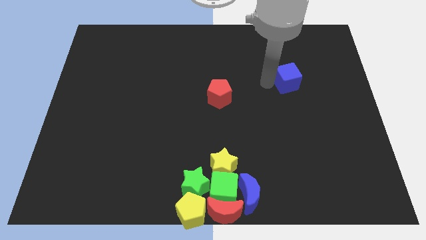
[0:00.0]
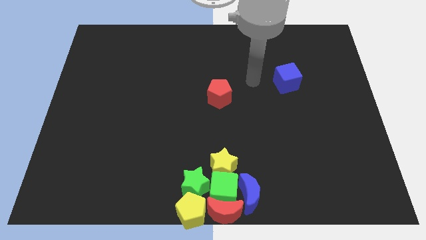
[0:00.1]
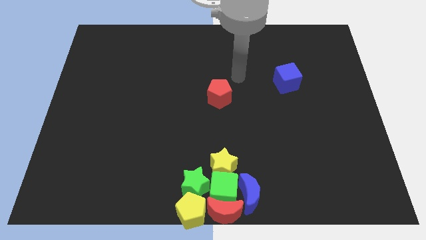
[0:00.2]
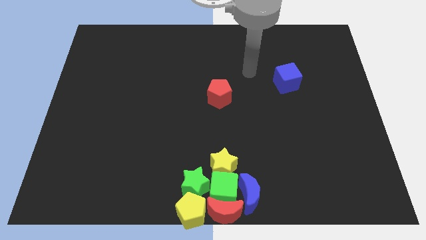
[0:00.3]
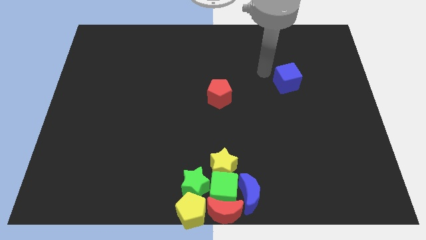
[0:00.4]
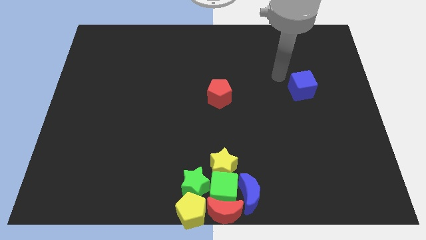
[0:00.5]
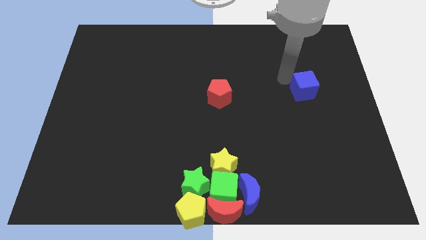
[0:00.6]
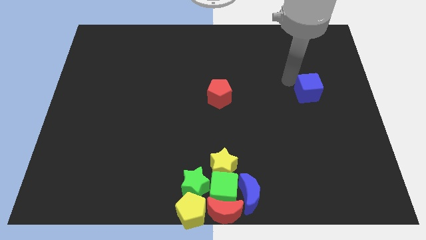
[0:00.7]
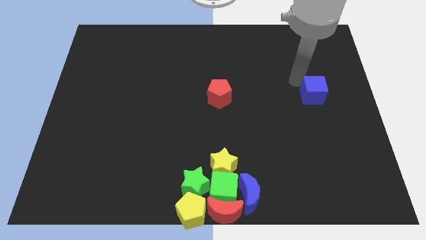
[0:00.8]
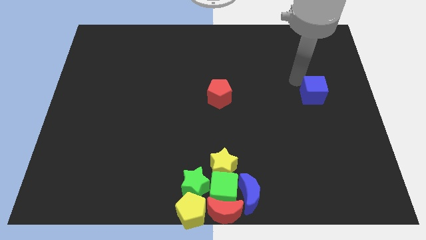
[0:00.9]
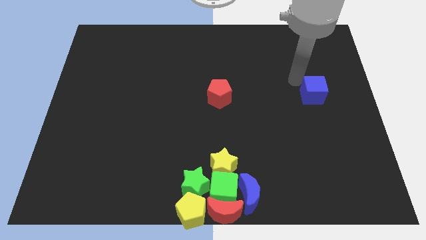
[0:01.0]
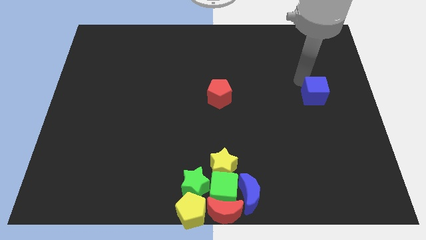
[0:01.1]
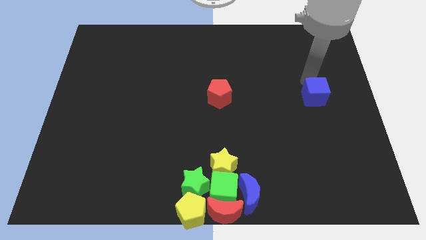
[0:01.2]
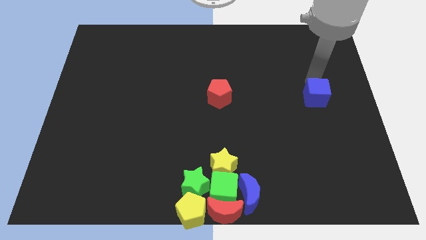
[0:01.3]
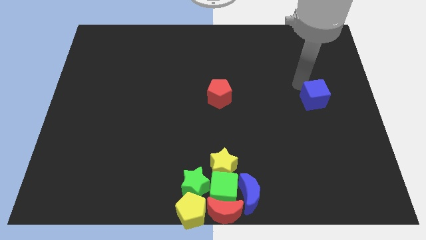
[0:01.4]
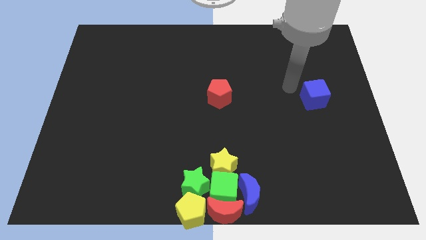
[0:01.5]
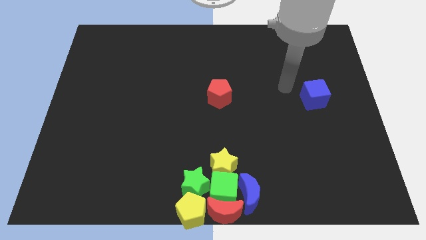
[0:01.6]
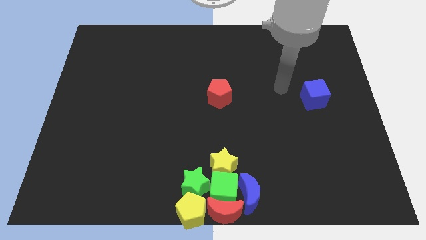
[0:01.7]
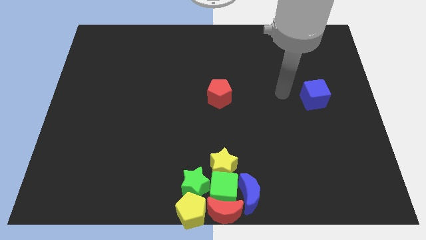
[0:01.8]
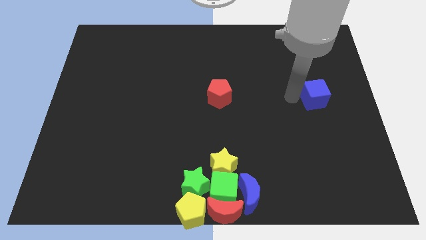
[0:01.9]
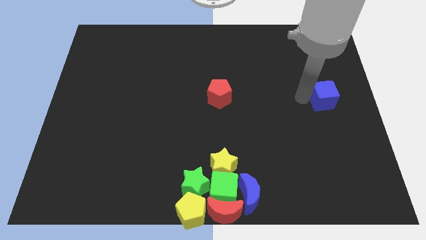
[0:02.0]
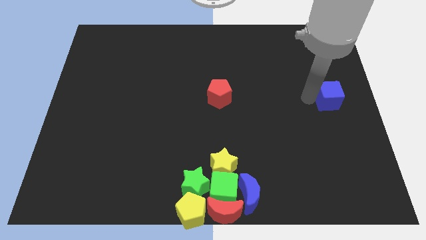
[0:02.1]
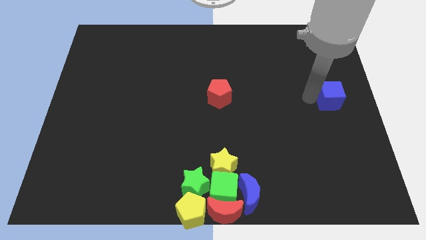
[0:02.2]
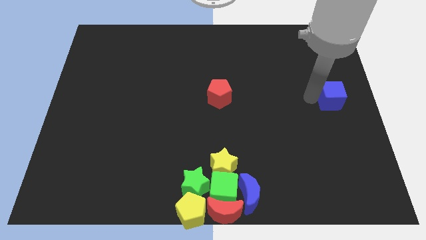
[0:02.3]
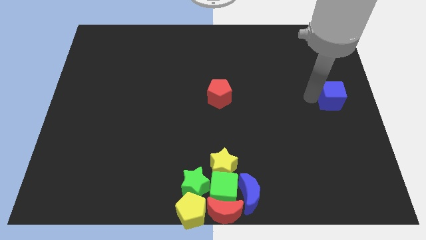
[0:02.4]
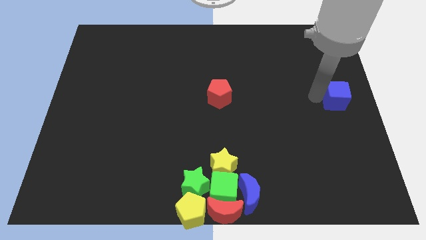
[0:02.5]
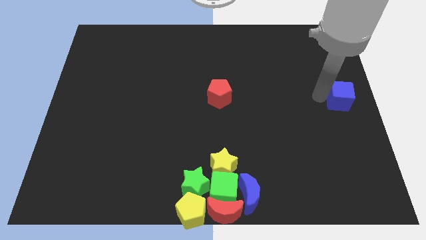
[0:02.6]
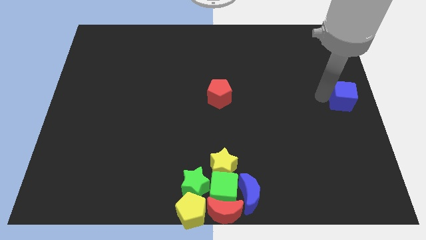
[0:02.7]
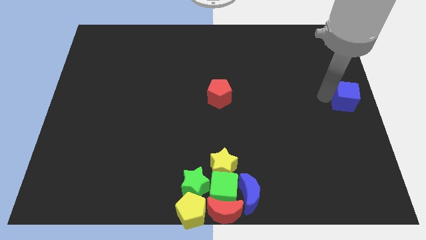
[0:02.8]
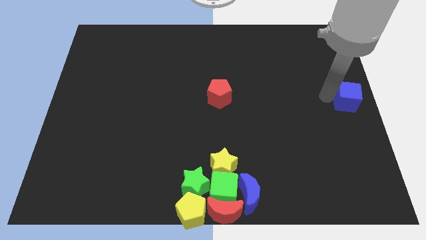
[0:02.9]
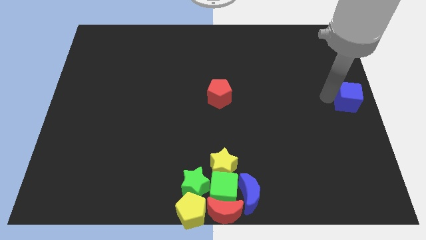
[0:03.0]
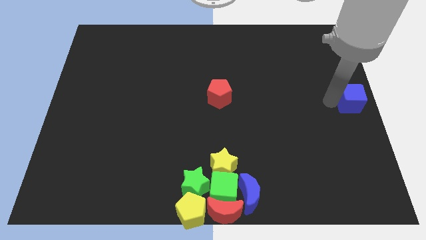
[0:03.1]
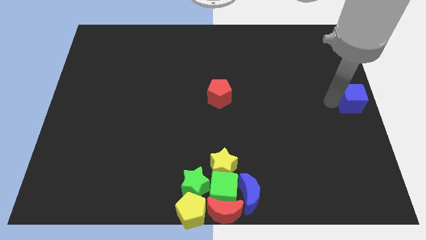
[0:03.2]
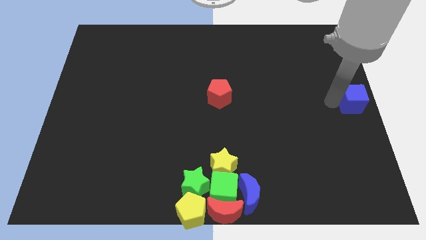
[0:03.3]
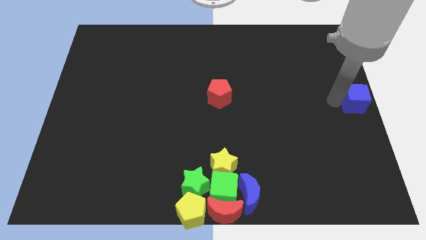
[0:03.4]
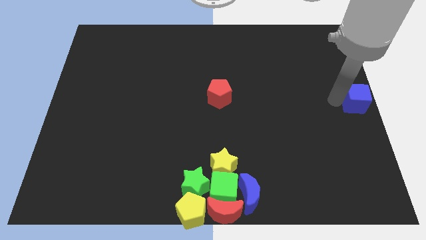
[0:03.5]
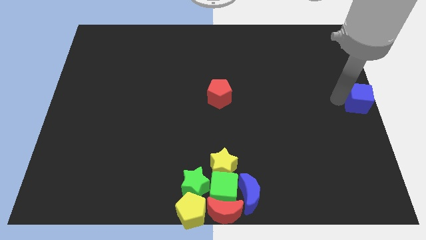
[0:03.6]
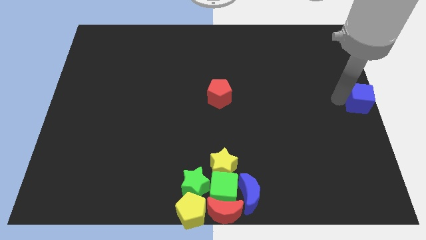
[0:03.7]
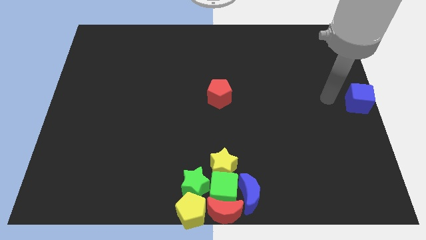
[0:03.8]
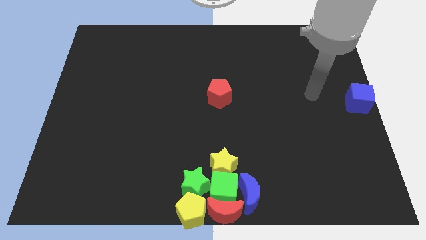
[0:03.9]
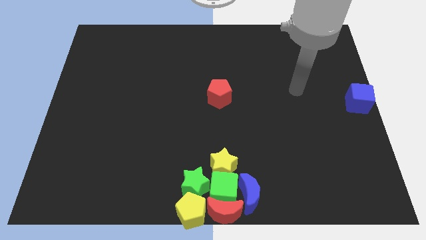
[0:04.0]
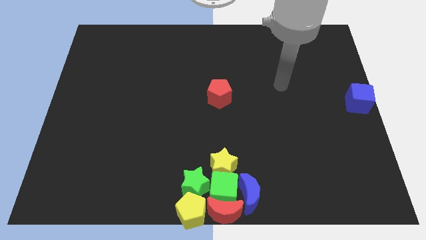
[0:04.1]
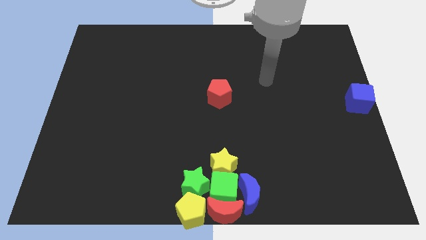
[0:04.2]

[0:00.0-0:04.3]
move the blue cube to the right center of the board

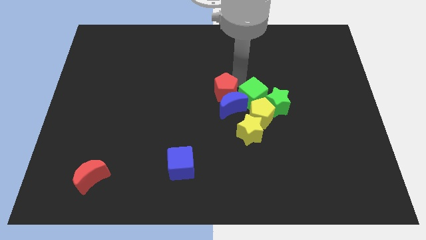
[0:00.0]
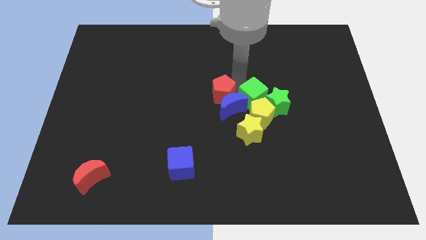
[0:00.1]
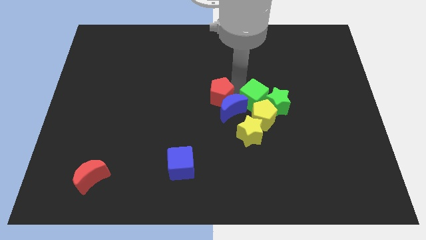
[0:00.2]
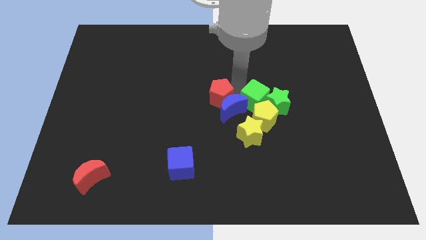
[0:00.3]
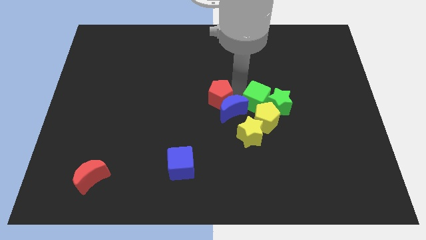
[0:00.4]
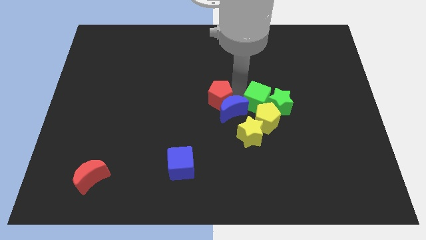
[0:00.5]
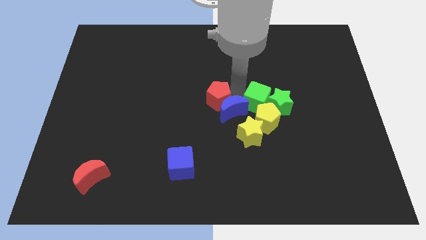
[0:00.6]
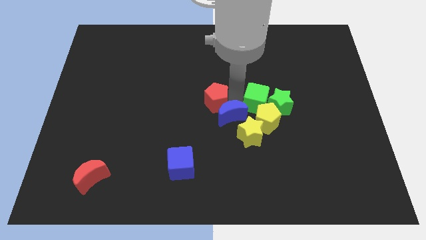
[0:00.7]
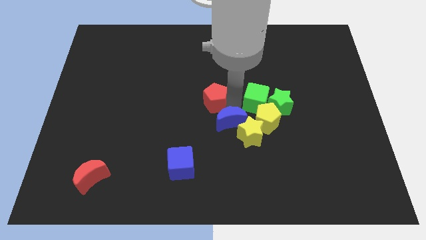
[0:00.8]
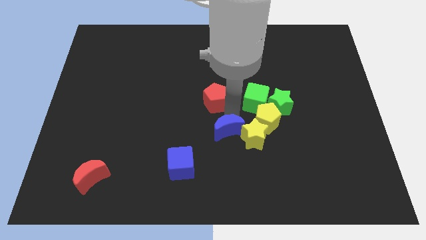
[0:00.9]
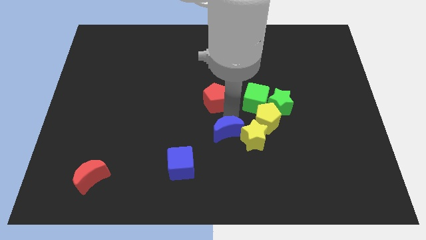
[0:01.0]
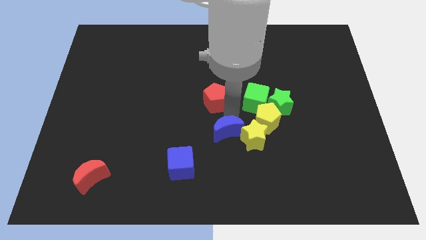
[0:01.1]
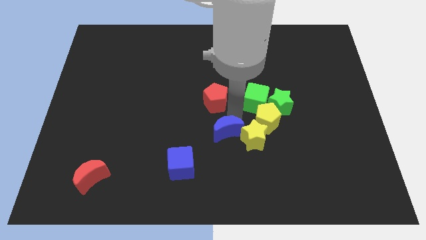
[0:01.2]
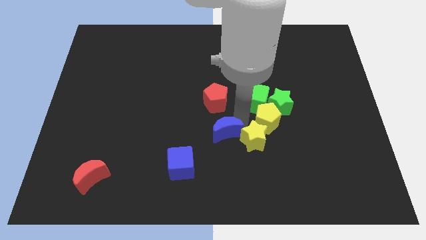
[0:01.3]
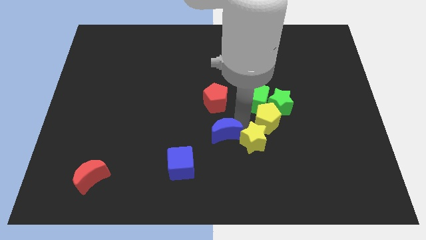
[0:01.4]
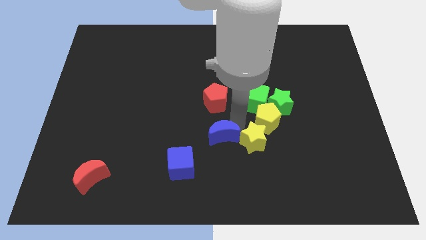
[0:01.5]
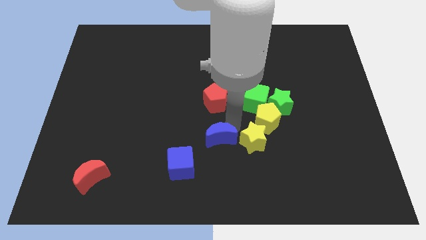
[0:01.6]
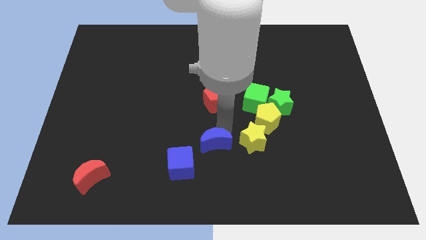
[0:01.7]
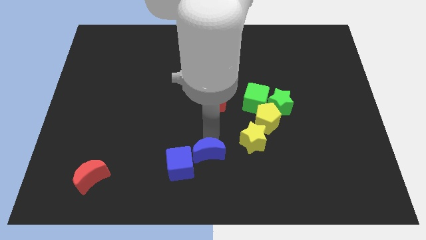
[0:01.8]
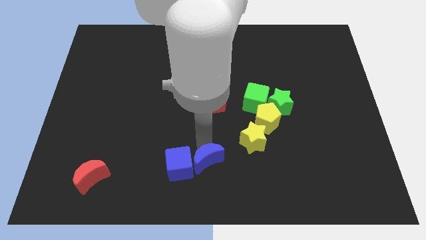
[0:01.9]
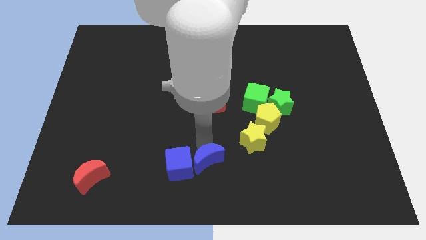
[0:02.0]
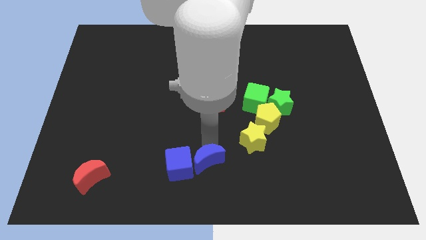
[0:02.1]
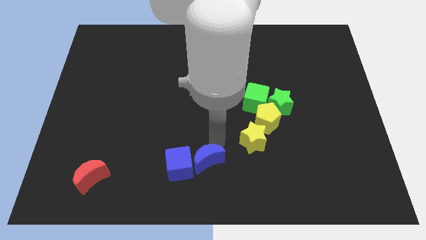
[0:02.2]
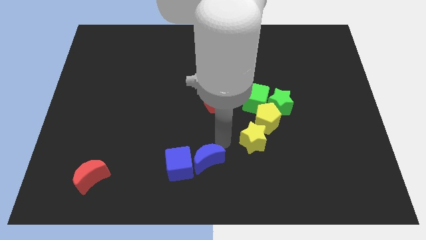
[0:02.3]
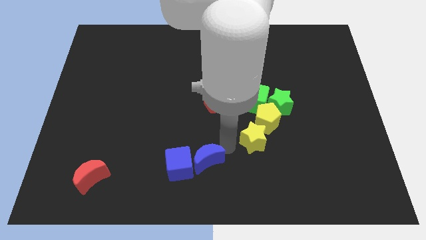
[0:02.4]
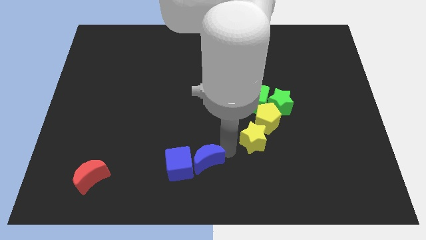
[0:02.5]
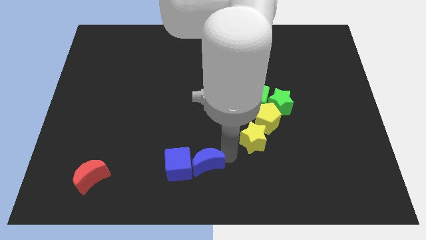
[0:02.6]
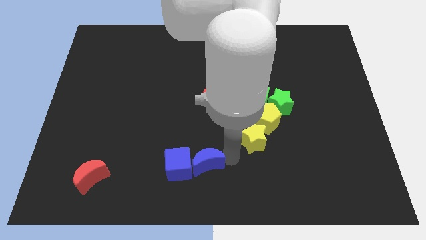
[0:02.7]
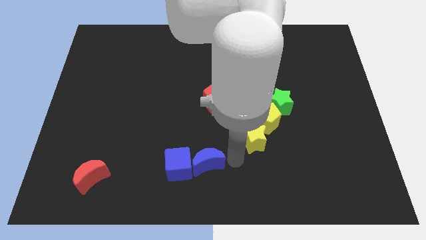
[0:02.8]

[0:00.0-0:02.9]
drag the blue moon right to the blue cube

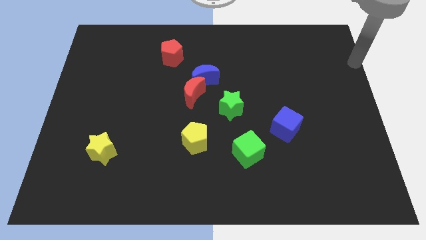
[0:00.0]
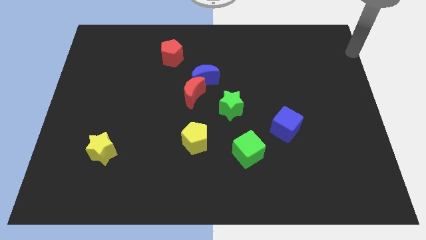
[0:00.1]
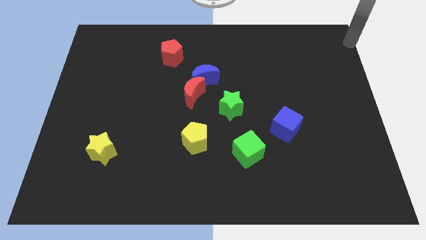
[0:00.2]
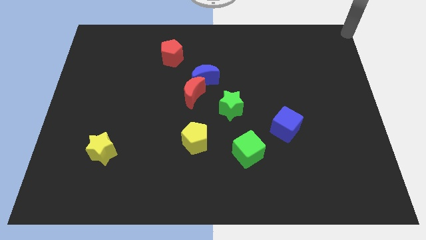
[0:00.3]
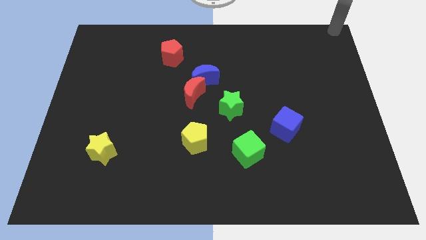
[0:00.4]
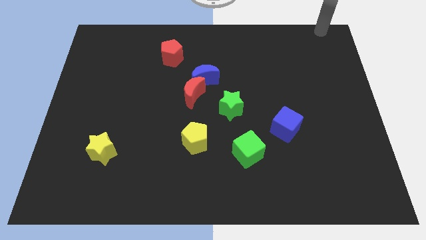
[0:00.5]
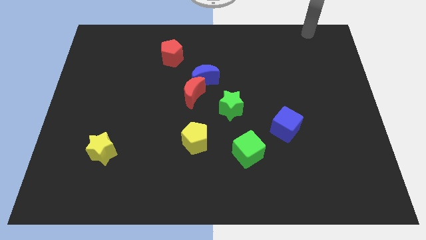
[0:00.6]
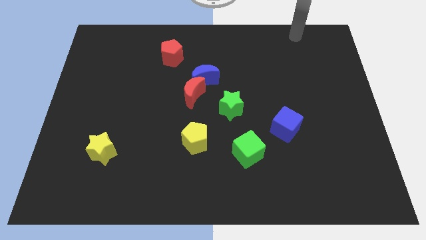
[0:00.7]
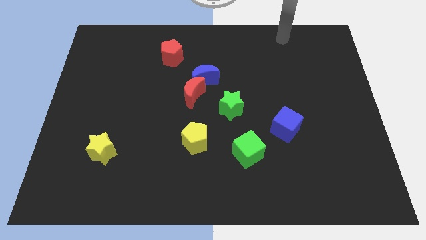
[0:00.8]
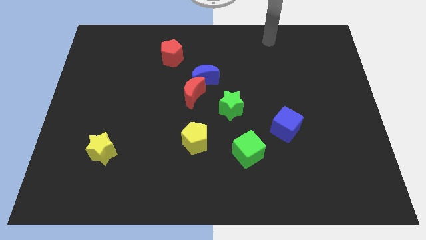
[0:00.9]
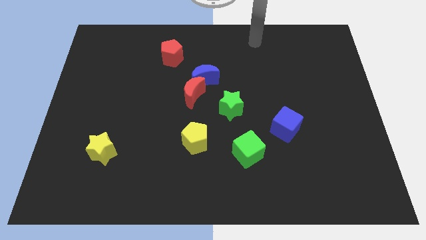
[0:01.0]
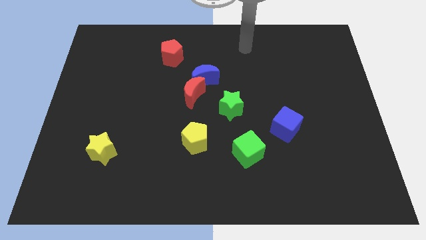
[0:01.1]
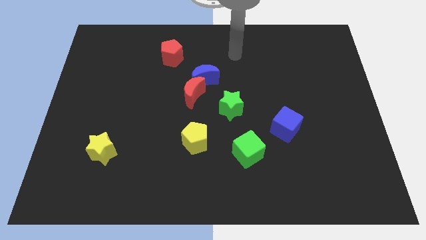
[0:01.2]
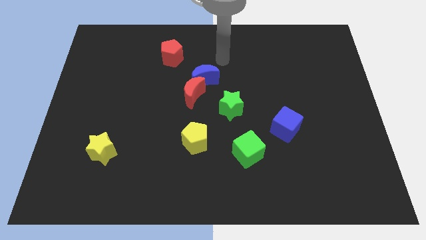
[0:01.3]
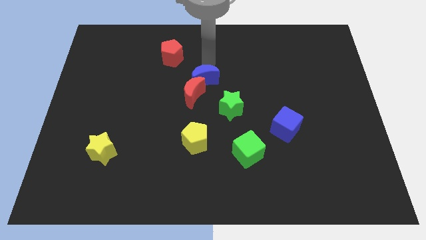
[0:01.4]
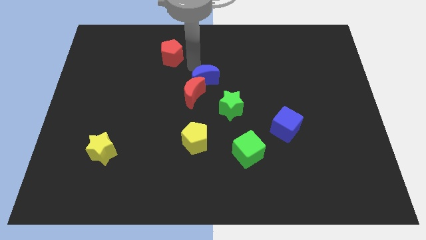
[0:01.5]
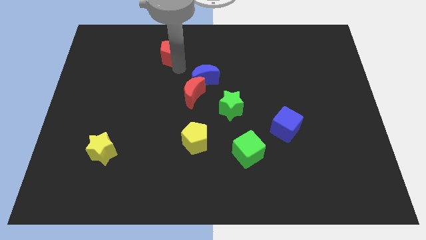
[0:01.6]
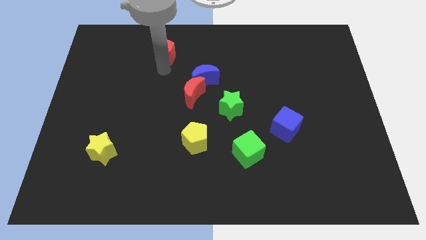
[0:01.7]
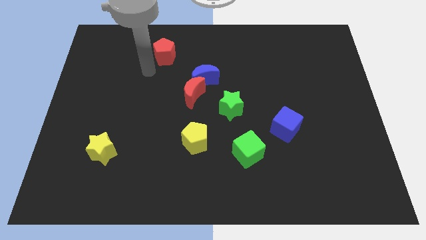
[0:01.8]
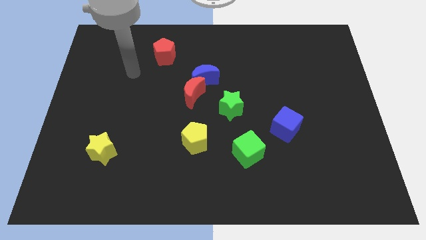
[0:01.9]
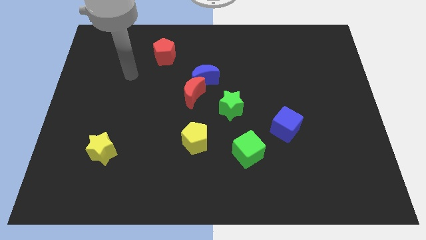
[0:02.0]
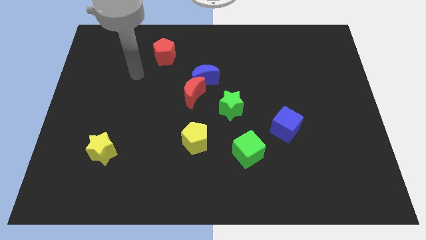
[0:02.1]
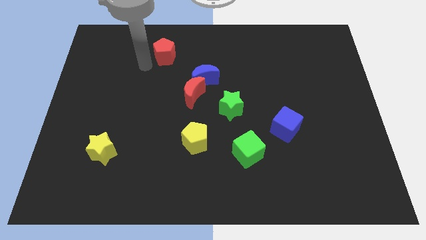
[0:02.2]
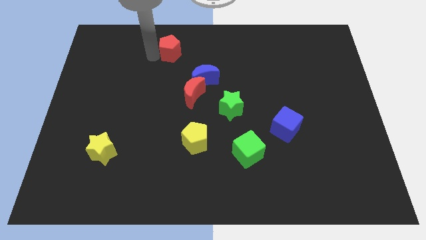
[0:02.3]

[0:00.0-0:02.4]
move your arm towards the bottom left side of the red pentagon
